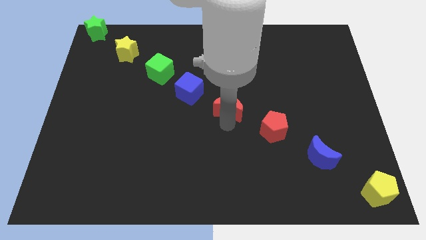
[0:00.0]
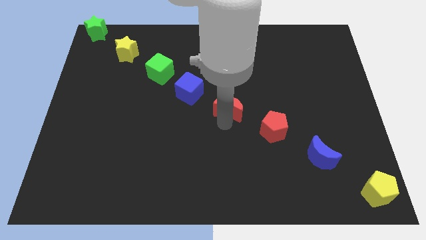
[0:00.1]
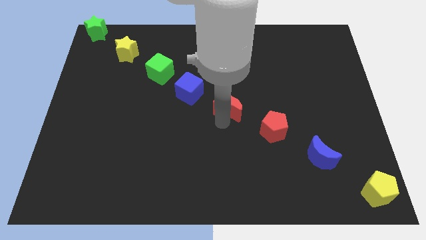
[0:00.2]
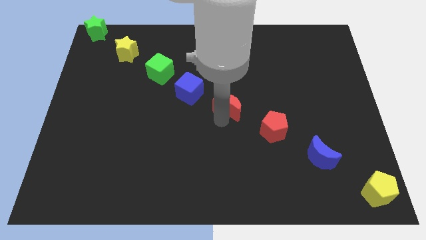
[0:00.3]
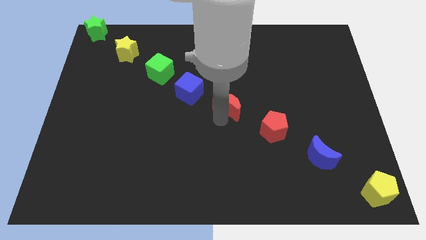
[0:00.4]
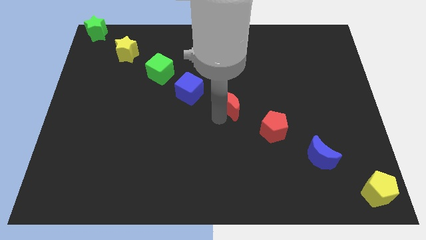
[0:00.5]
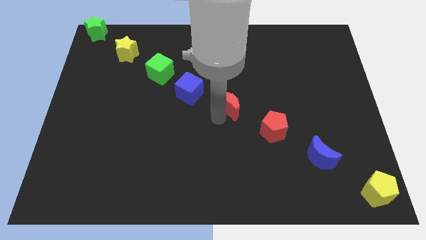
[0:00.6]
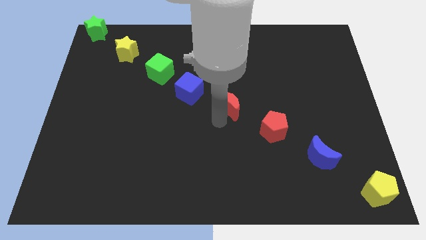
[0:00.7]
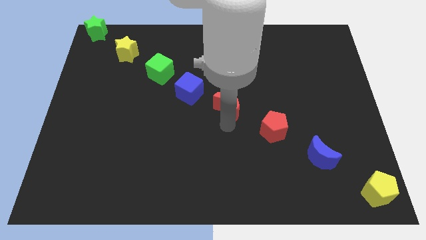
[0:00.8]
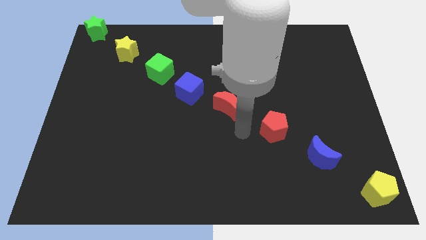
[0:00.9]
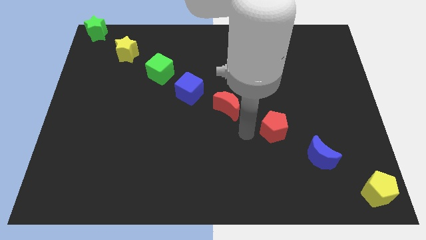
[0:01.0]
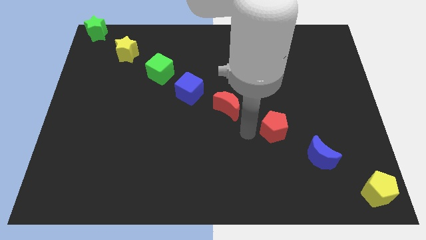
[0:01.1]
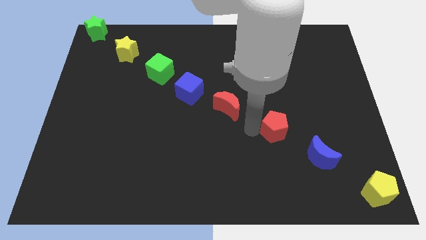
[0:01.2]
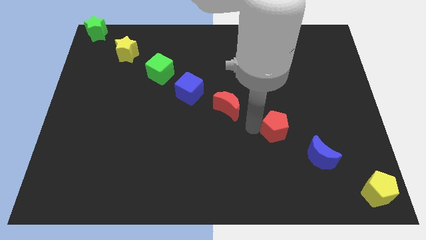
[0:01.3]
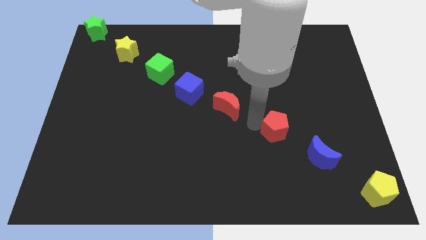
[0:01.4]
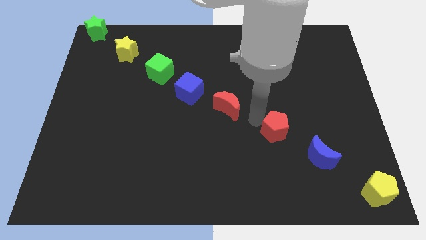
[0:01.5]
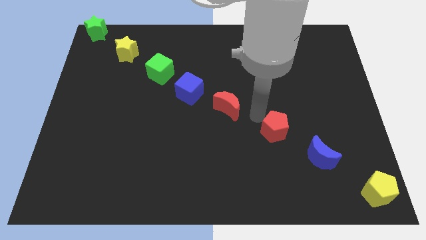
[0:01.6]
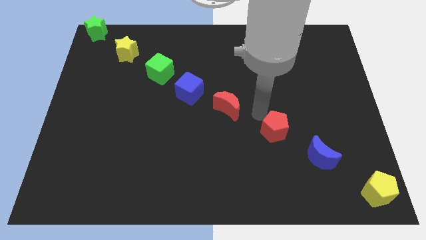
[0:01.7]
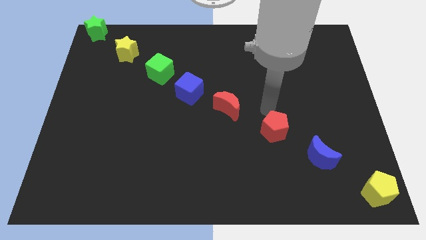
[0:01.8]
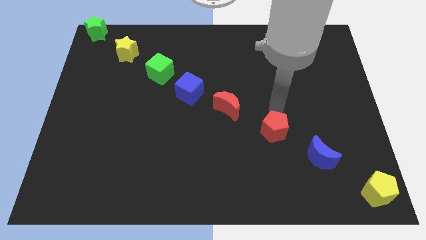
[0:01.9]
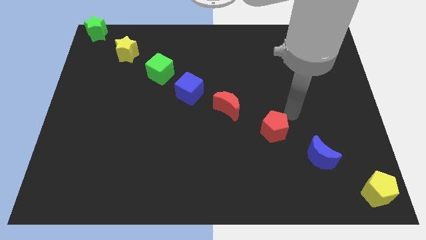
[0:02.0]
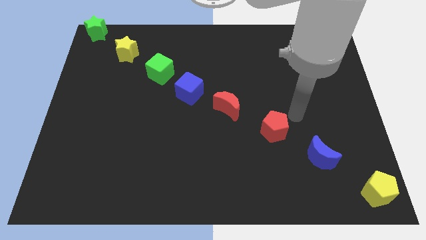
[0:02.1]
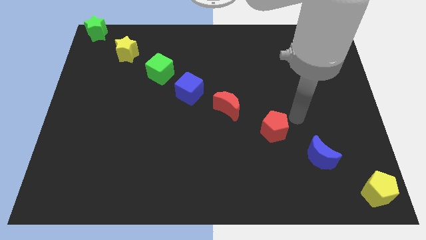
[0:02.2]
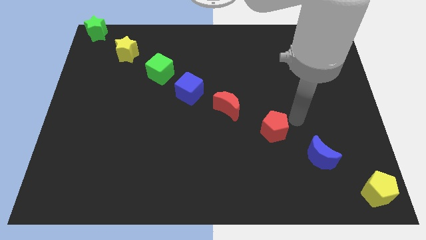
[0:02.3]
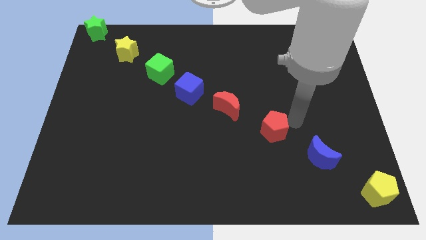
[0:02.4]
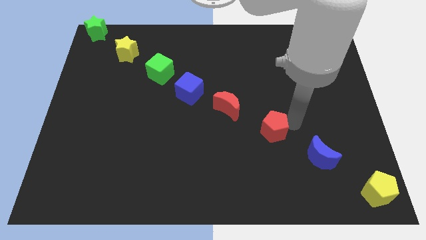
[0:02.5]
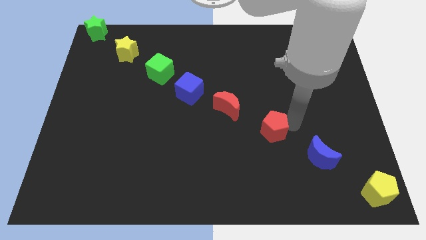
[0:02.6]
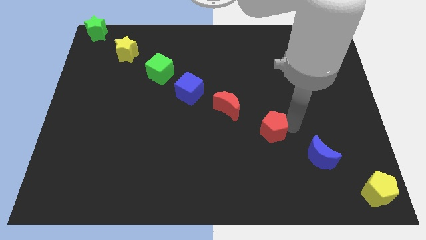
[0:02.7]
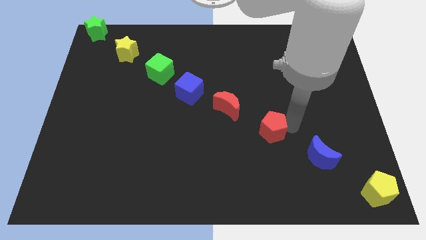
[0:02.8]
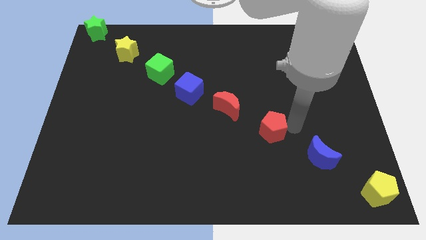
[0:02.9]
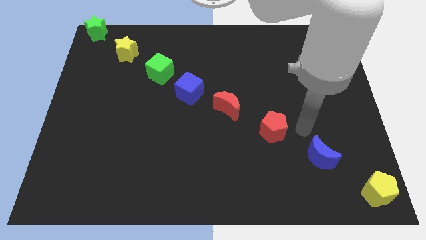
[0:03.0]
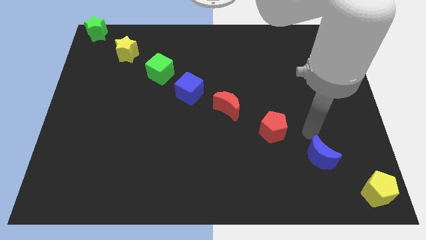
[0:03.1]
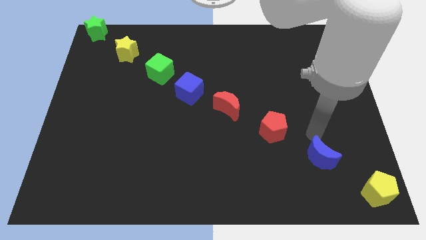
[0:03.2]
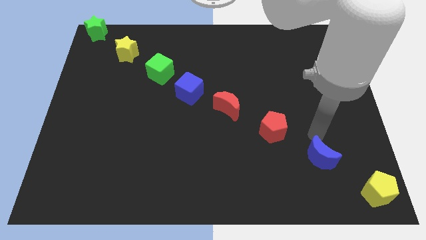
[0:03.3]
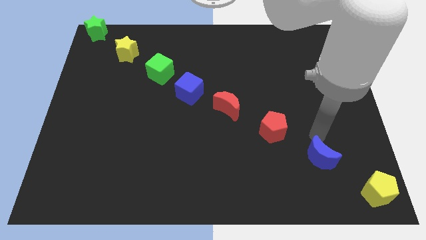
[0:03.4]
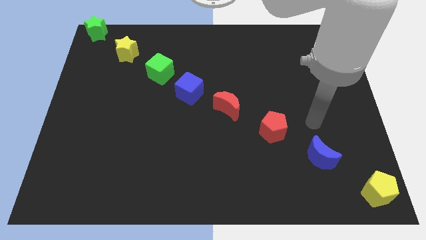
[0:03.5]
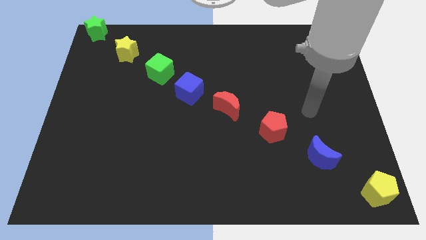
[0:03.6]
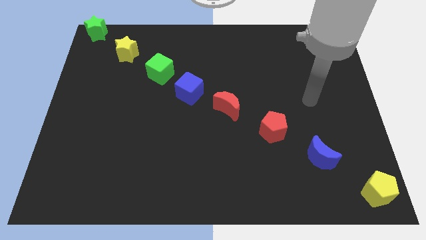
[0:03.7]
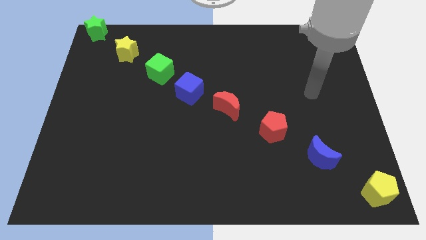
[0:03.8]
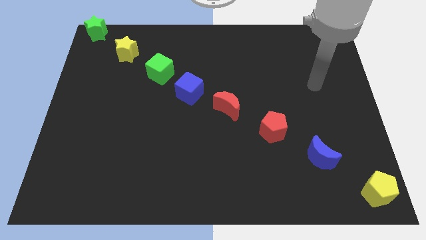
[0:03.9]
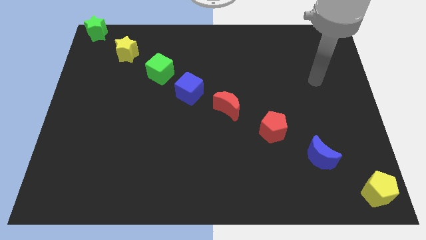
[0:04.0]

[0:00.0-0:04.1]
adjust the red moon to the top left of the red pentagon diagonally

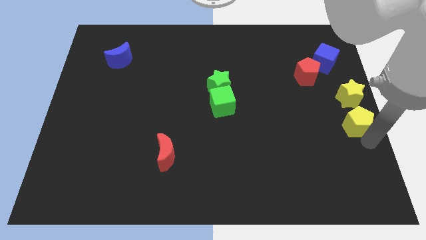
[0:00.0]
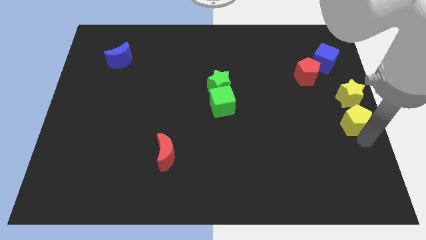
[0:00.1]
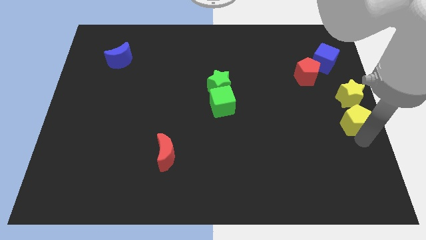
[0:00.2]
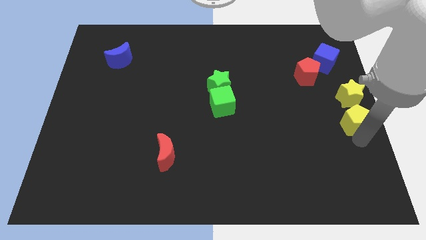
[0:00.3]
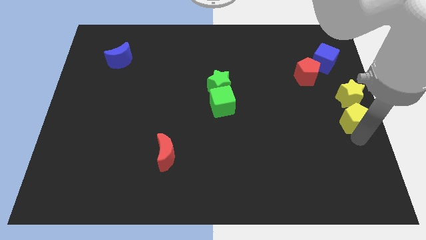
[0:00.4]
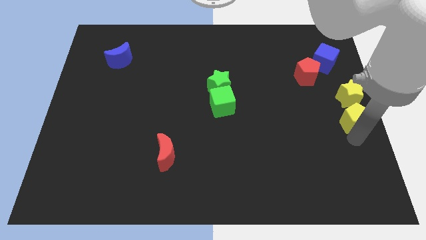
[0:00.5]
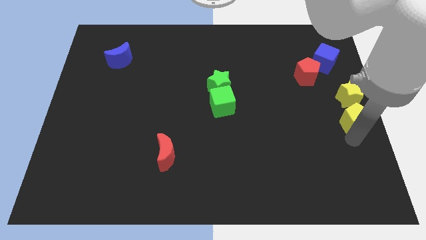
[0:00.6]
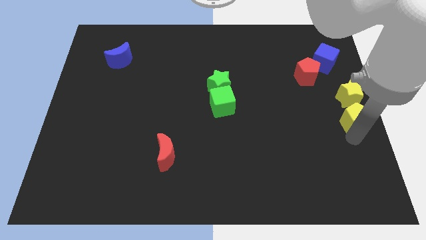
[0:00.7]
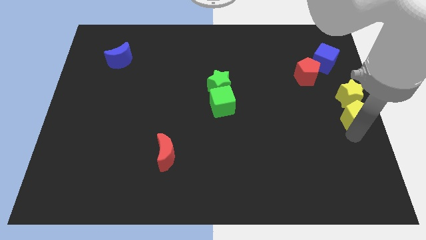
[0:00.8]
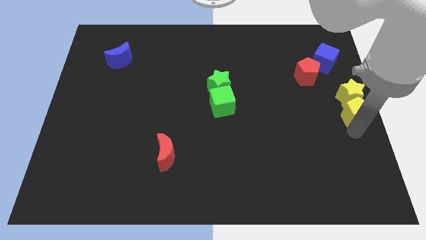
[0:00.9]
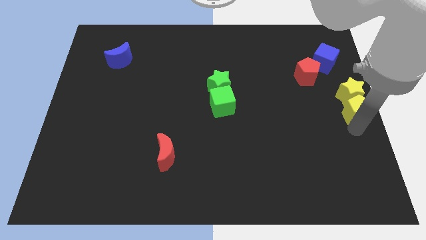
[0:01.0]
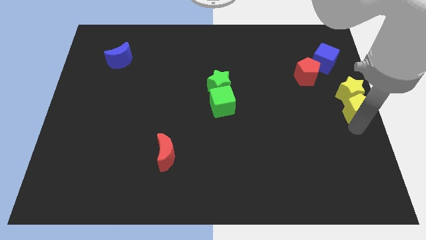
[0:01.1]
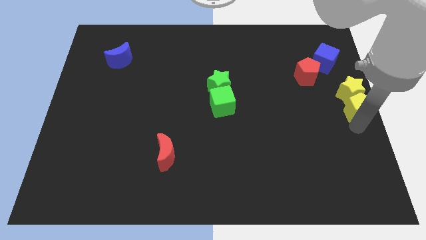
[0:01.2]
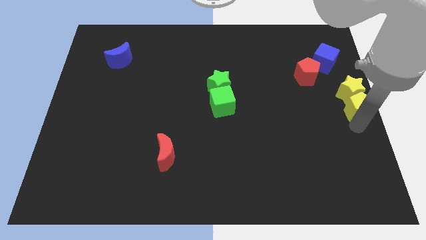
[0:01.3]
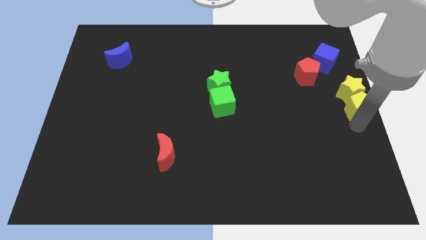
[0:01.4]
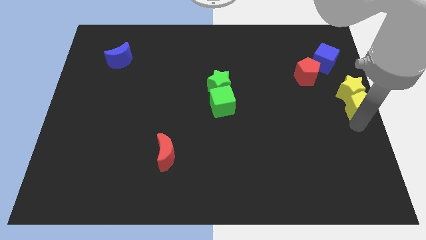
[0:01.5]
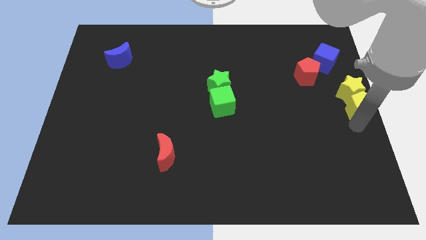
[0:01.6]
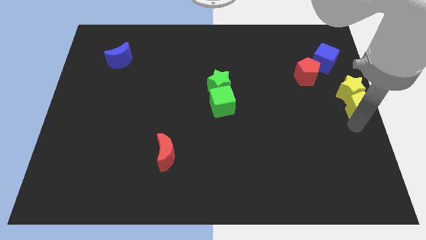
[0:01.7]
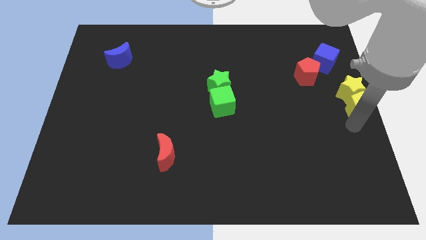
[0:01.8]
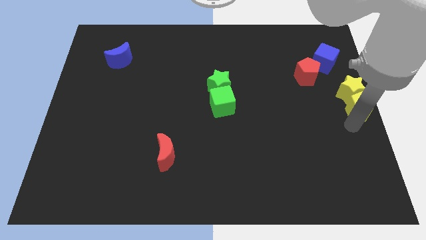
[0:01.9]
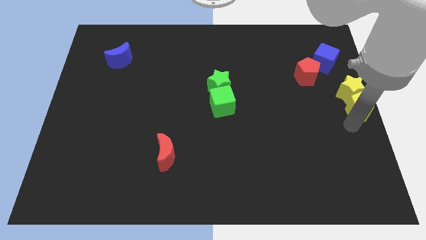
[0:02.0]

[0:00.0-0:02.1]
slide the yellow pentagon and yellow star slightly upwards

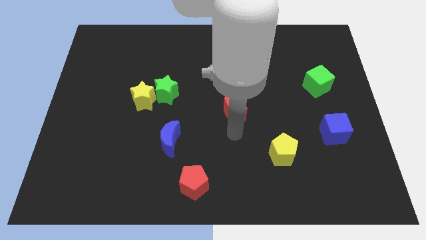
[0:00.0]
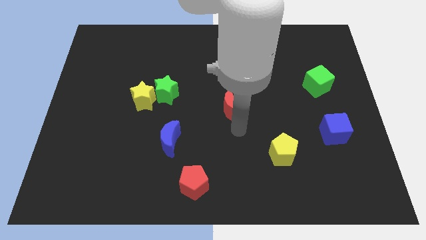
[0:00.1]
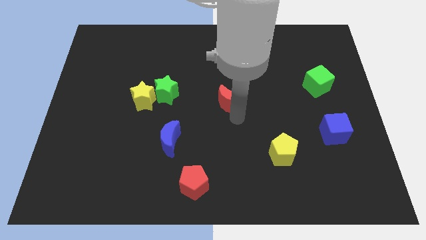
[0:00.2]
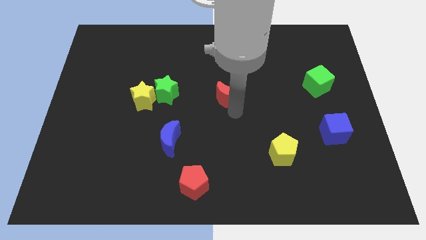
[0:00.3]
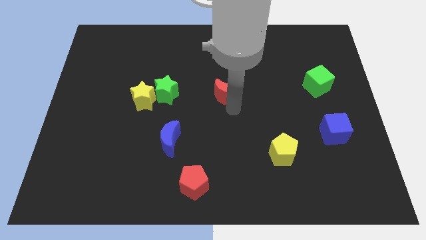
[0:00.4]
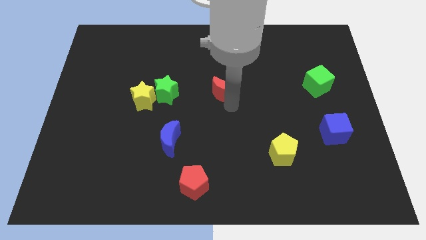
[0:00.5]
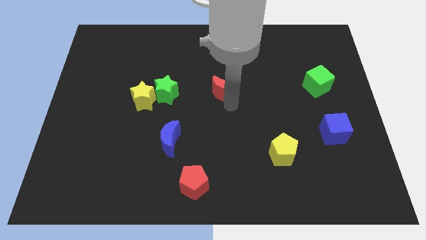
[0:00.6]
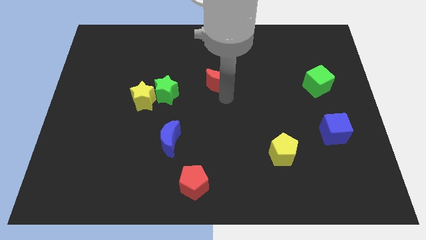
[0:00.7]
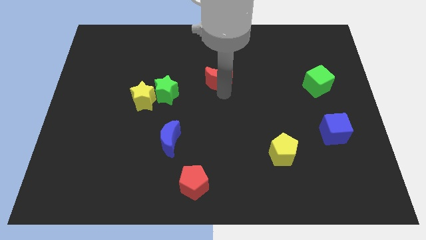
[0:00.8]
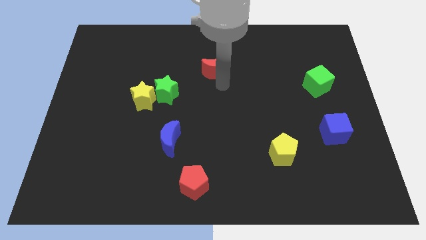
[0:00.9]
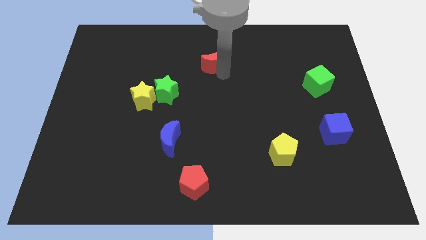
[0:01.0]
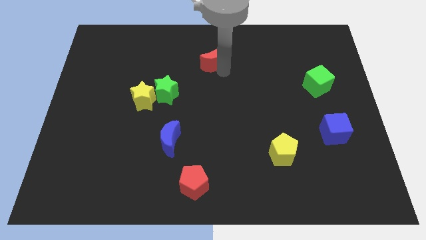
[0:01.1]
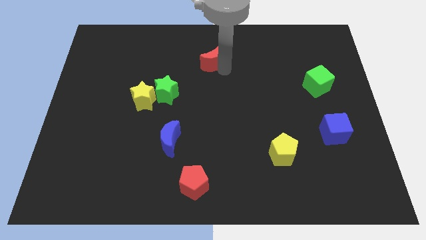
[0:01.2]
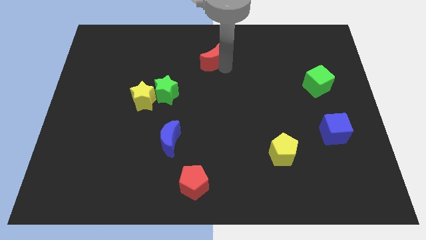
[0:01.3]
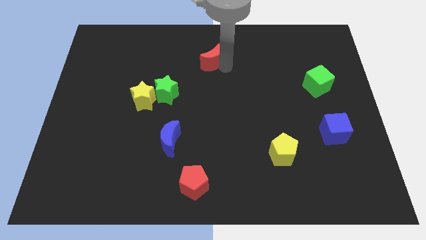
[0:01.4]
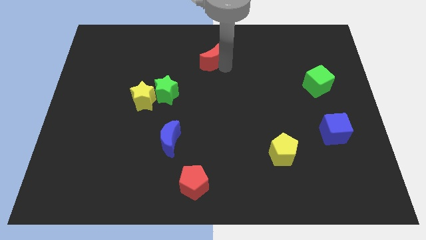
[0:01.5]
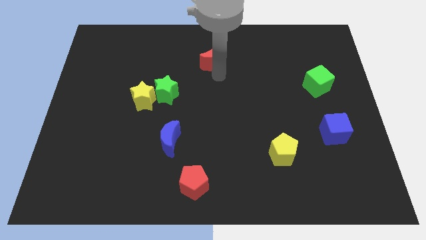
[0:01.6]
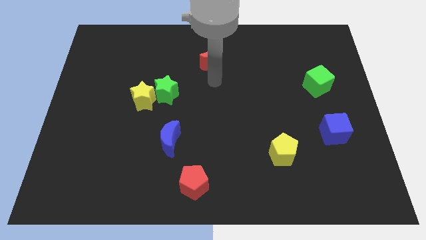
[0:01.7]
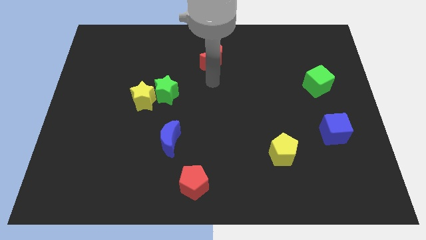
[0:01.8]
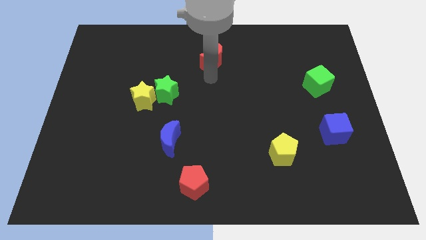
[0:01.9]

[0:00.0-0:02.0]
move the red crescent towards the top center

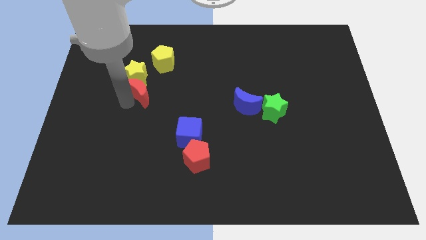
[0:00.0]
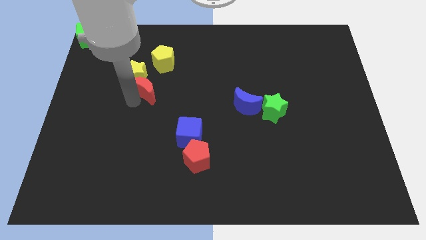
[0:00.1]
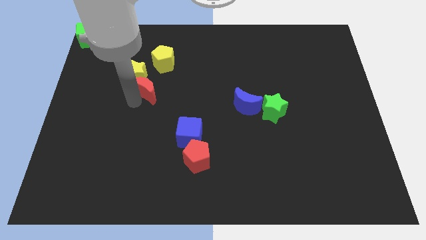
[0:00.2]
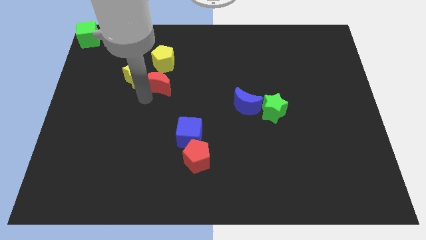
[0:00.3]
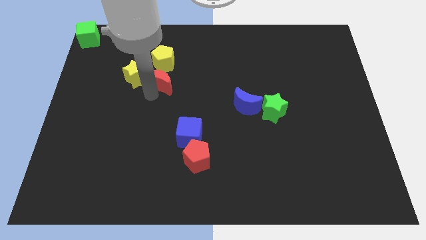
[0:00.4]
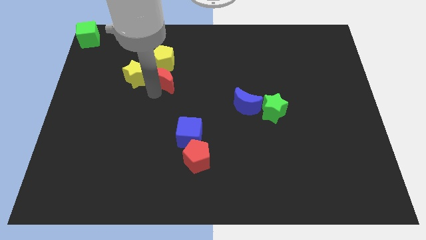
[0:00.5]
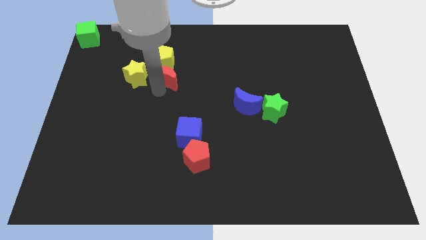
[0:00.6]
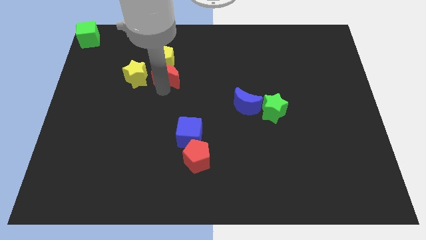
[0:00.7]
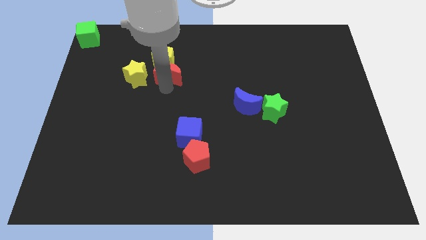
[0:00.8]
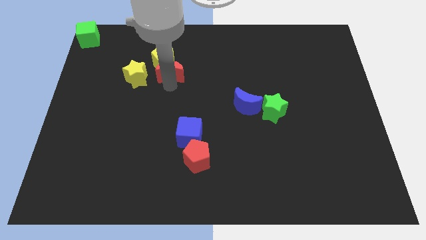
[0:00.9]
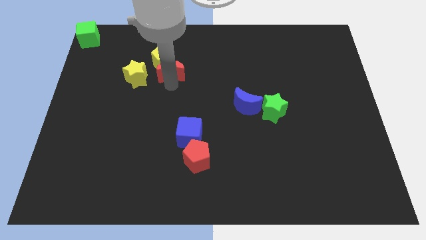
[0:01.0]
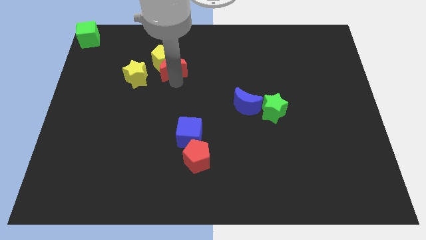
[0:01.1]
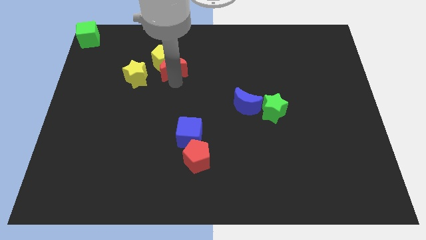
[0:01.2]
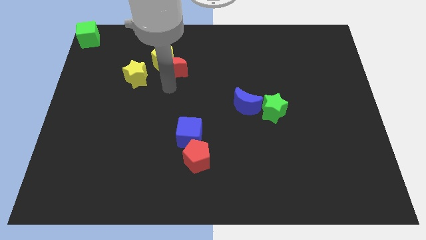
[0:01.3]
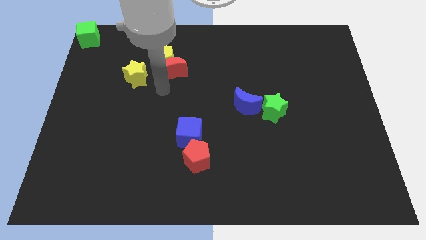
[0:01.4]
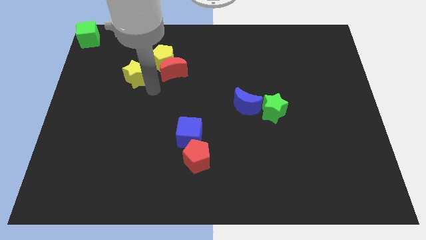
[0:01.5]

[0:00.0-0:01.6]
move the red moon into the yellow pentagon
